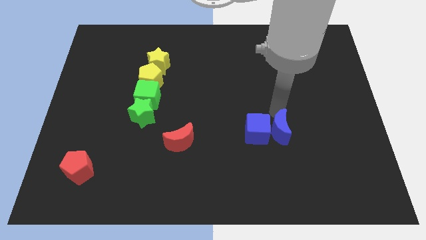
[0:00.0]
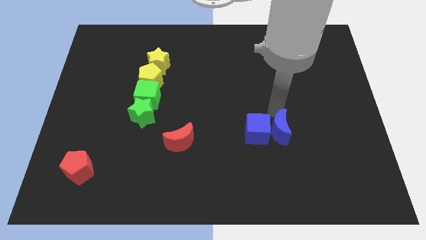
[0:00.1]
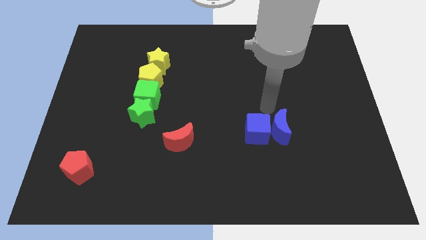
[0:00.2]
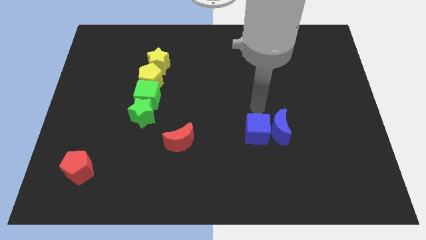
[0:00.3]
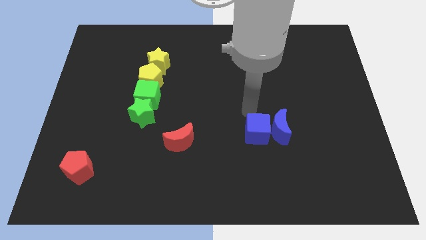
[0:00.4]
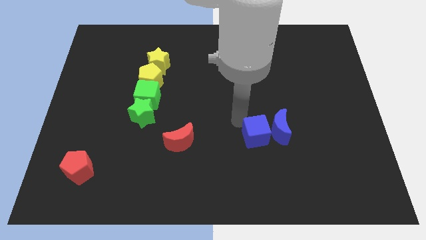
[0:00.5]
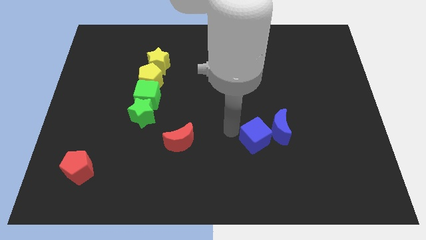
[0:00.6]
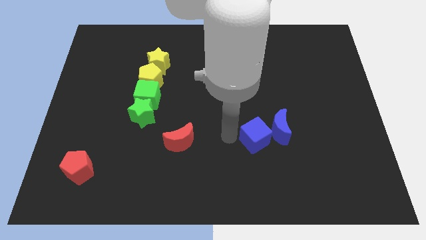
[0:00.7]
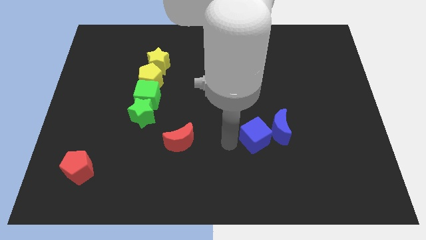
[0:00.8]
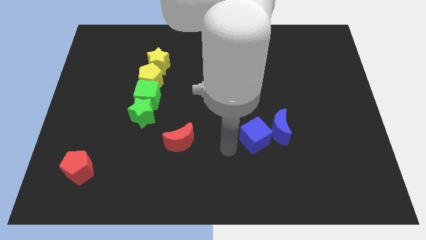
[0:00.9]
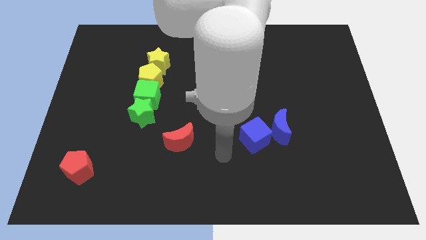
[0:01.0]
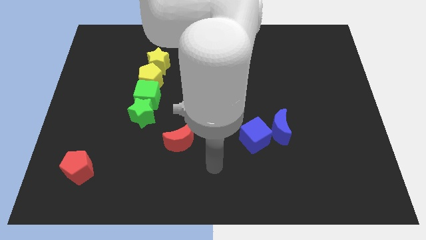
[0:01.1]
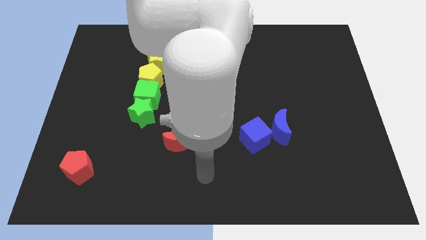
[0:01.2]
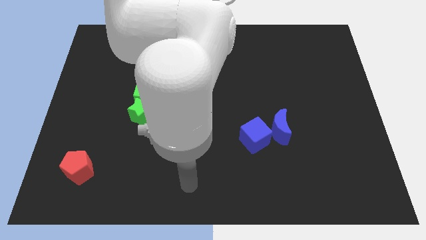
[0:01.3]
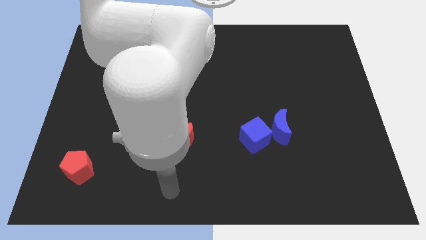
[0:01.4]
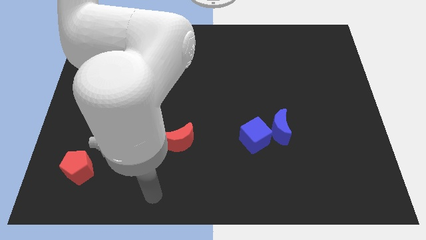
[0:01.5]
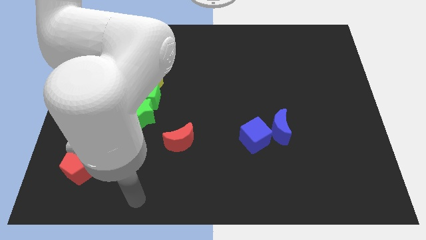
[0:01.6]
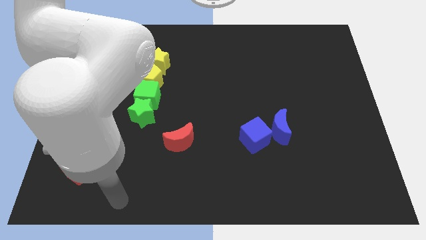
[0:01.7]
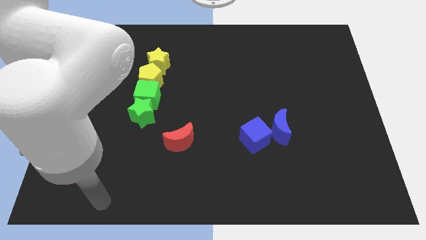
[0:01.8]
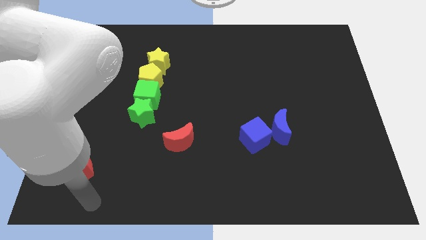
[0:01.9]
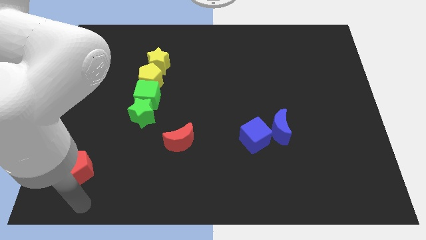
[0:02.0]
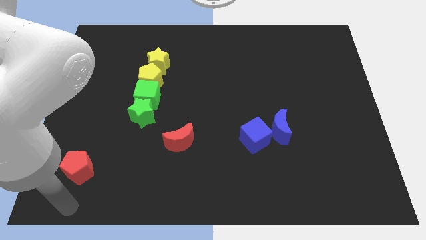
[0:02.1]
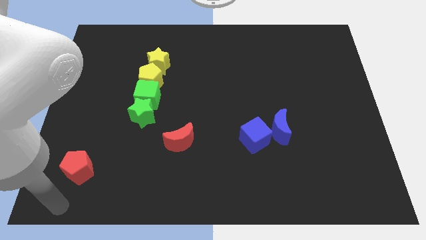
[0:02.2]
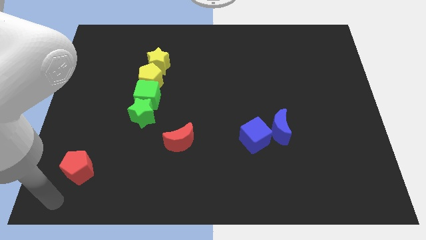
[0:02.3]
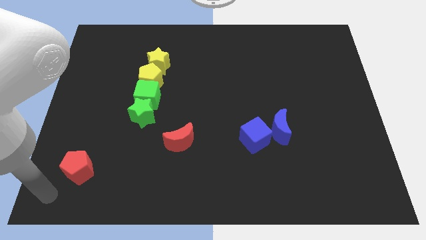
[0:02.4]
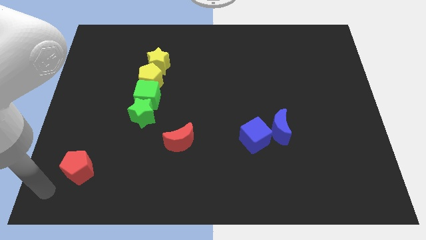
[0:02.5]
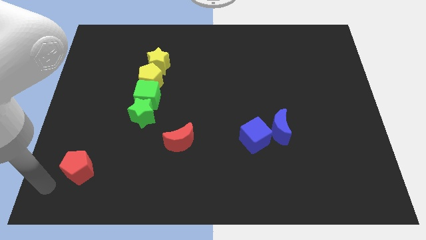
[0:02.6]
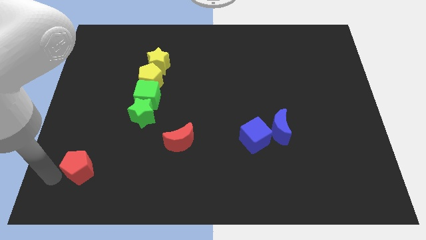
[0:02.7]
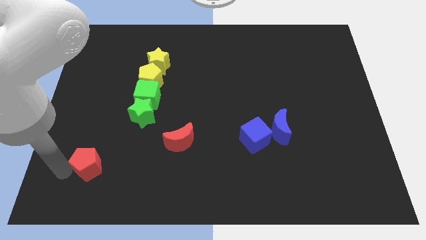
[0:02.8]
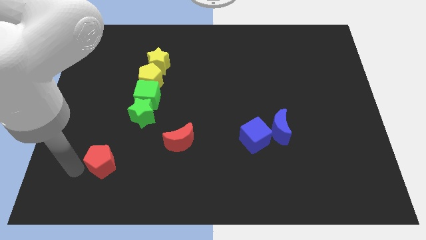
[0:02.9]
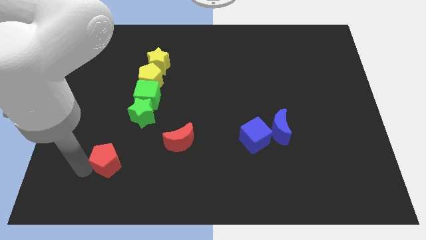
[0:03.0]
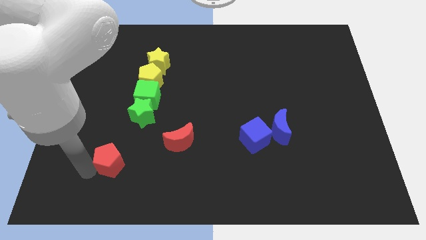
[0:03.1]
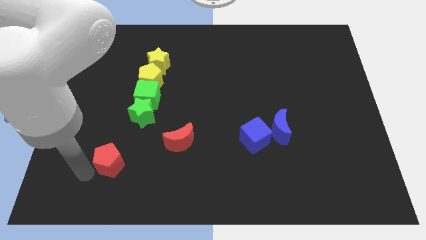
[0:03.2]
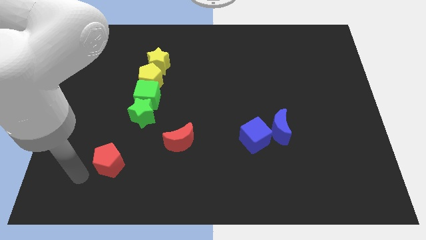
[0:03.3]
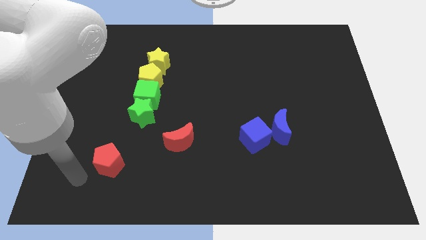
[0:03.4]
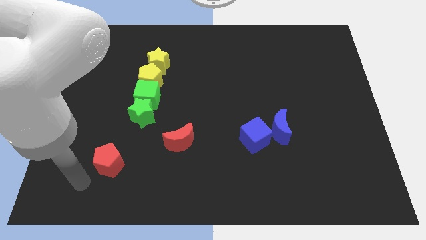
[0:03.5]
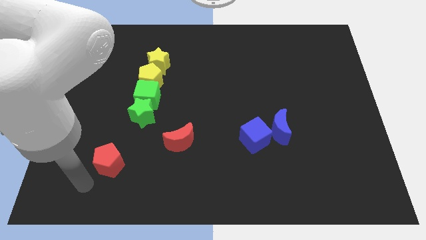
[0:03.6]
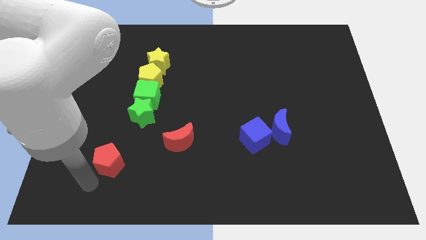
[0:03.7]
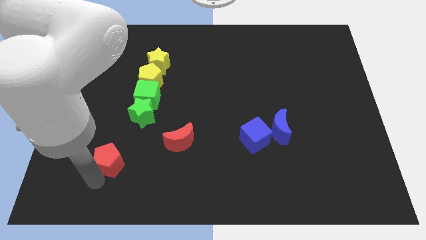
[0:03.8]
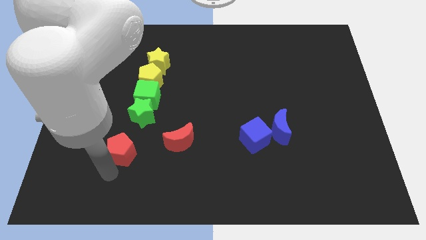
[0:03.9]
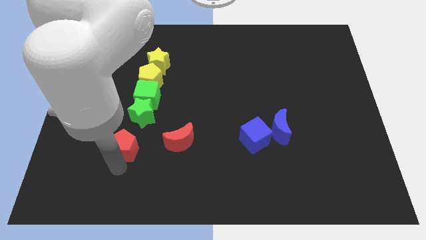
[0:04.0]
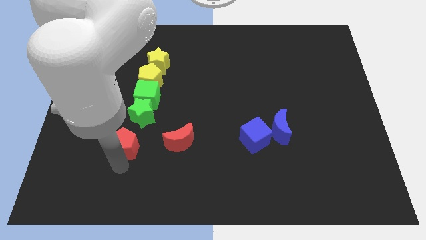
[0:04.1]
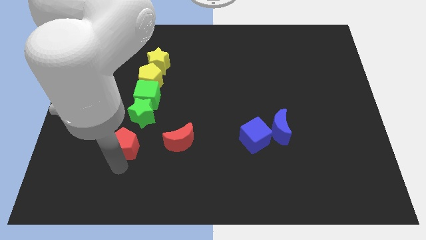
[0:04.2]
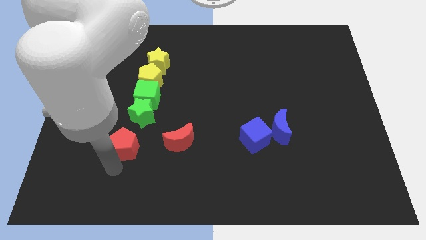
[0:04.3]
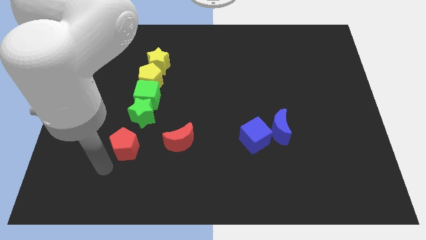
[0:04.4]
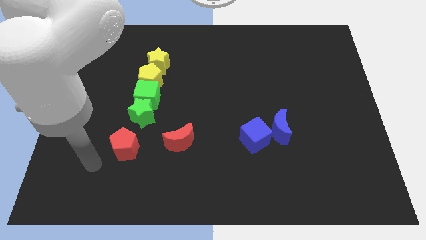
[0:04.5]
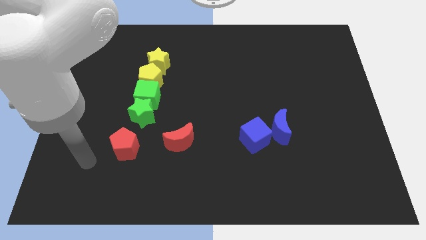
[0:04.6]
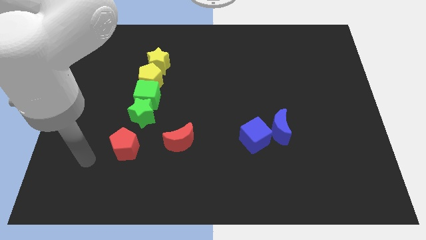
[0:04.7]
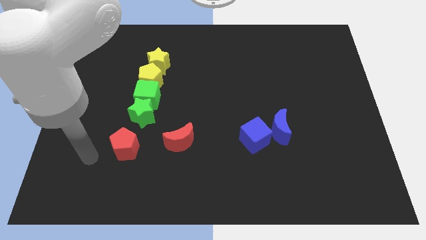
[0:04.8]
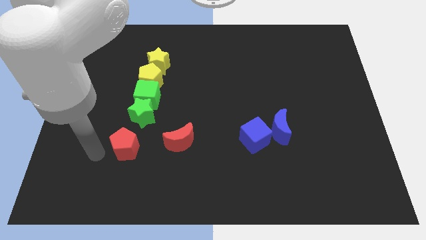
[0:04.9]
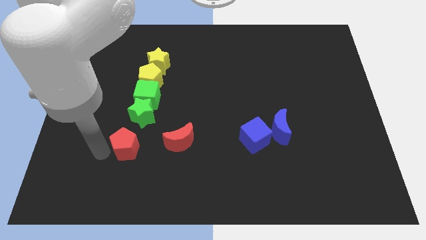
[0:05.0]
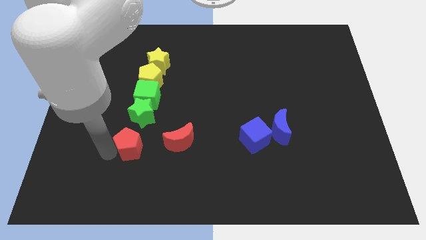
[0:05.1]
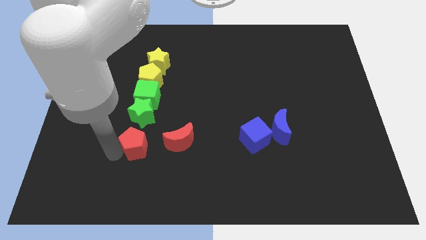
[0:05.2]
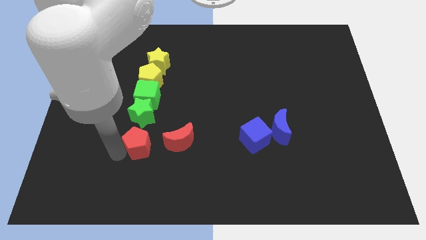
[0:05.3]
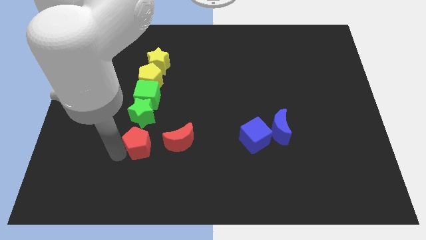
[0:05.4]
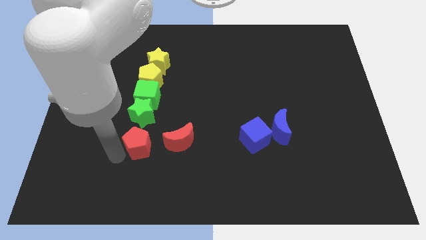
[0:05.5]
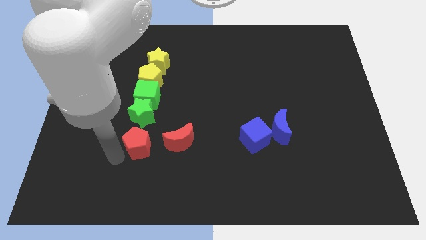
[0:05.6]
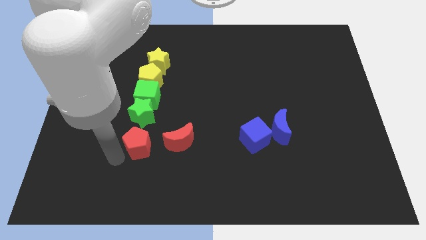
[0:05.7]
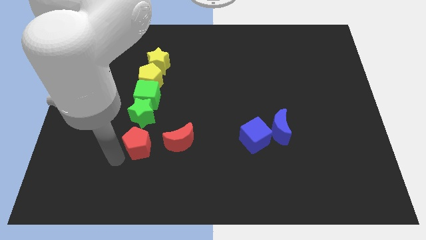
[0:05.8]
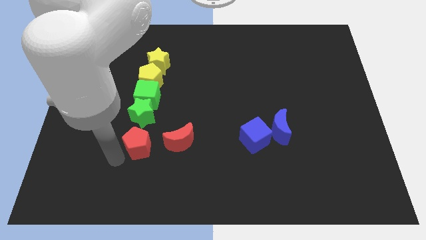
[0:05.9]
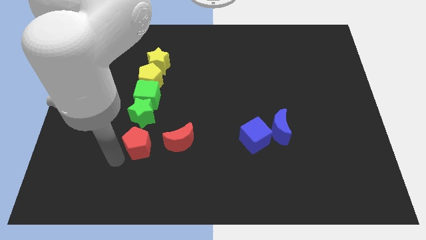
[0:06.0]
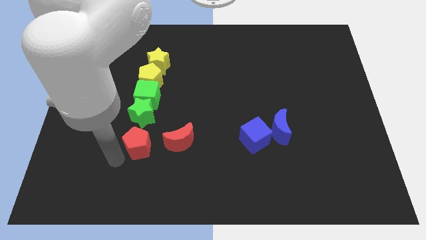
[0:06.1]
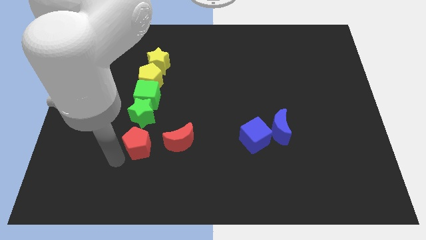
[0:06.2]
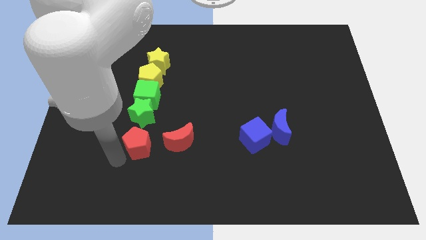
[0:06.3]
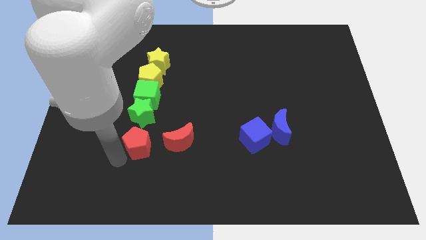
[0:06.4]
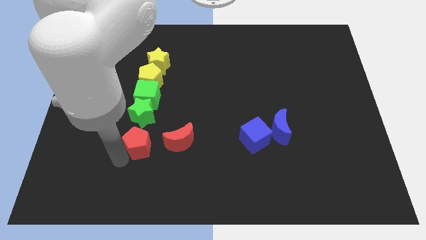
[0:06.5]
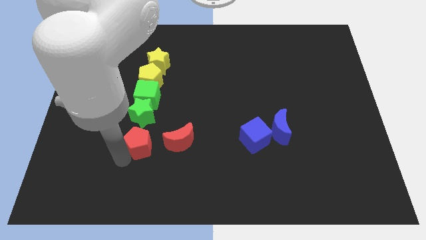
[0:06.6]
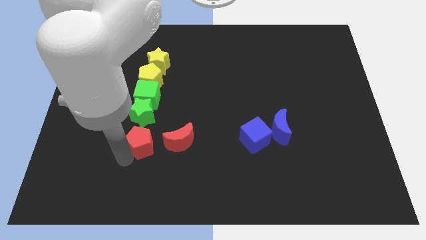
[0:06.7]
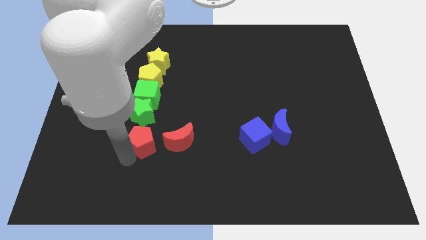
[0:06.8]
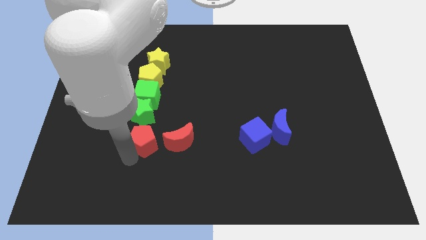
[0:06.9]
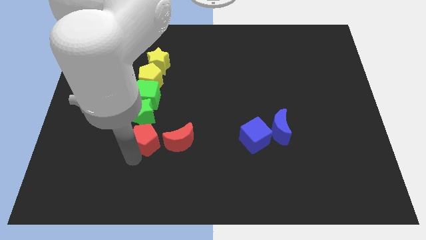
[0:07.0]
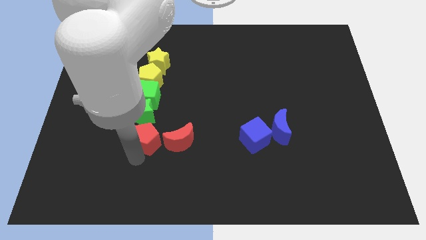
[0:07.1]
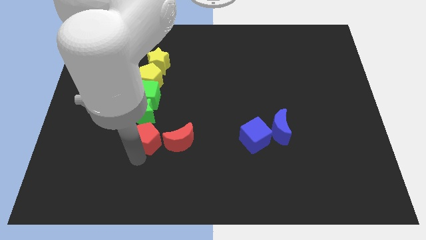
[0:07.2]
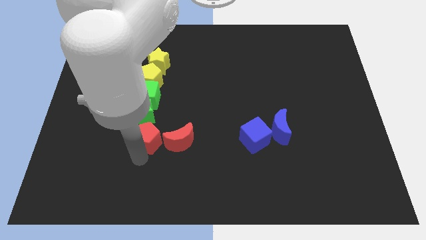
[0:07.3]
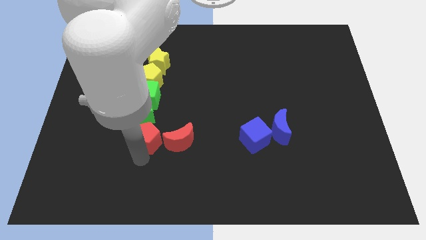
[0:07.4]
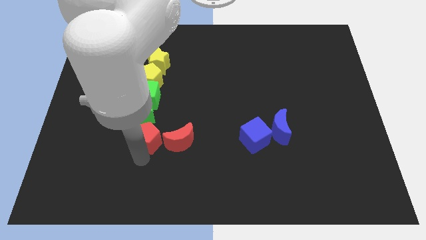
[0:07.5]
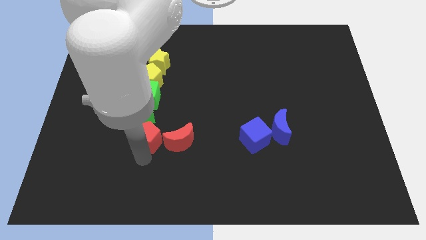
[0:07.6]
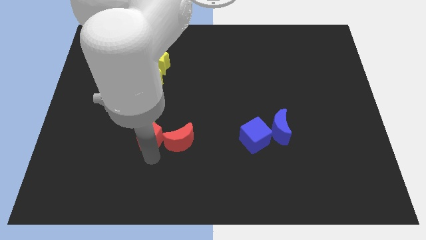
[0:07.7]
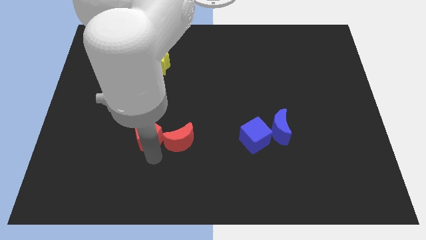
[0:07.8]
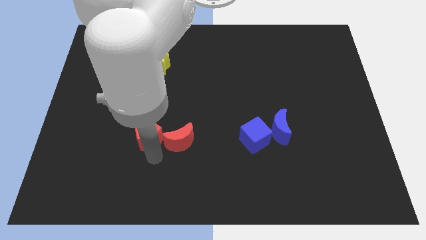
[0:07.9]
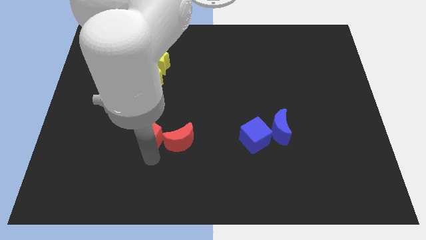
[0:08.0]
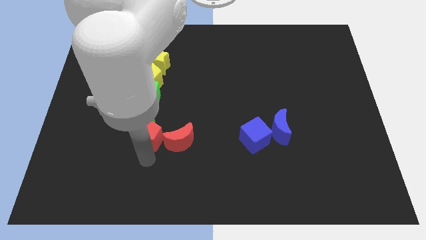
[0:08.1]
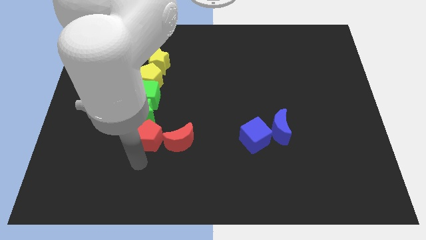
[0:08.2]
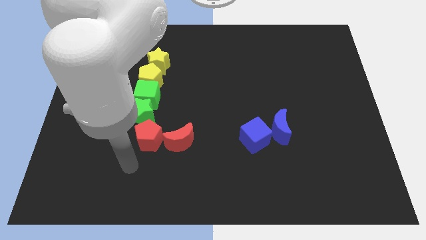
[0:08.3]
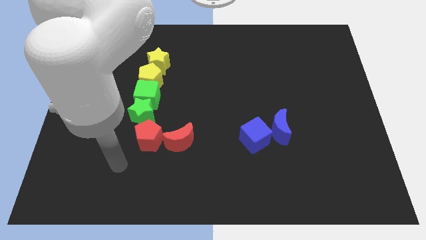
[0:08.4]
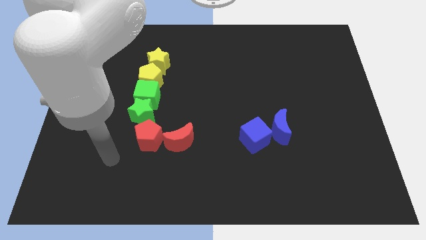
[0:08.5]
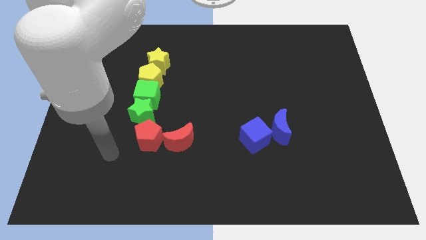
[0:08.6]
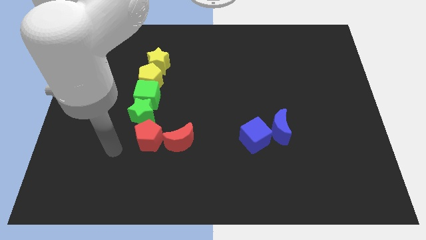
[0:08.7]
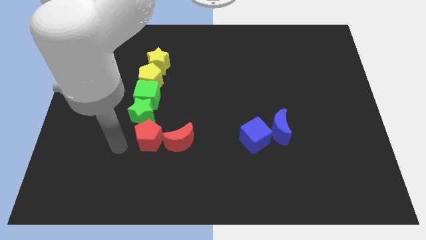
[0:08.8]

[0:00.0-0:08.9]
push the red pentagon to the bottom right of the green star

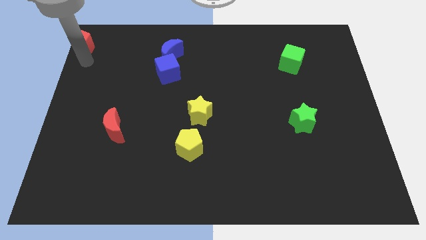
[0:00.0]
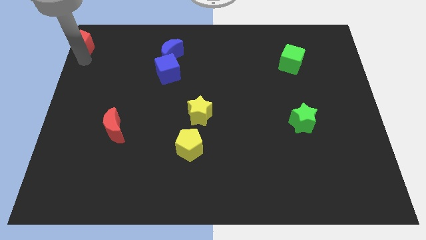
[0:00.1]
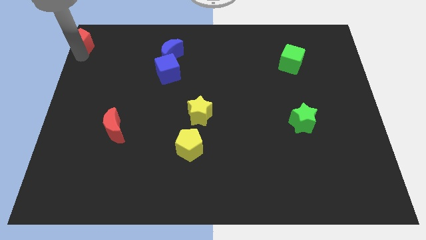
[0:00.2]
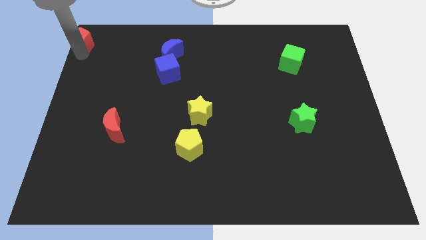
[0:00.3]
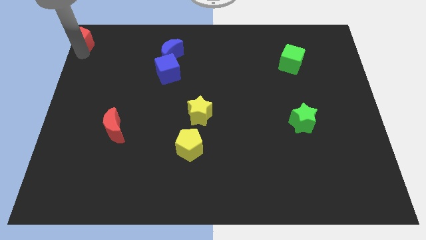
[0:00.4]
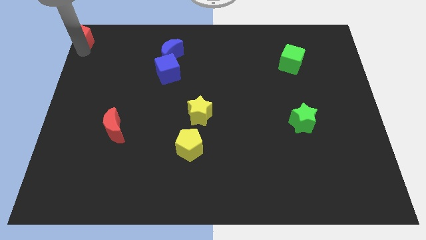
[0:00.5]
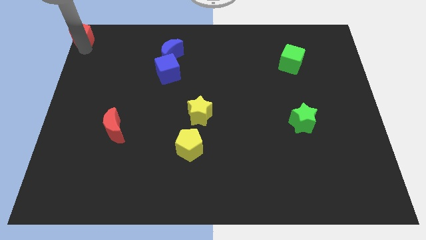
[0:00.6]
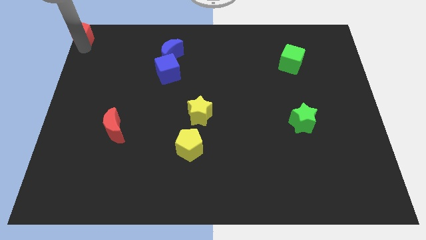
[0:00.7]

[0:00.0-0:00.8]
push the red pentagon to the top of the board
